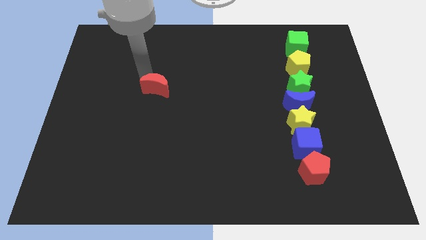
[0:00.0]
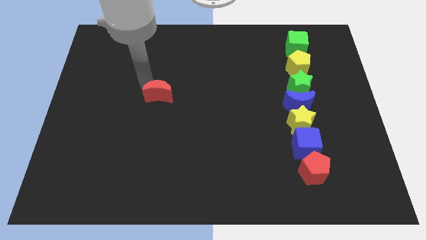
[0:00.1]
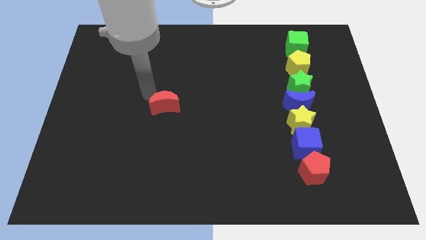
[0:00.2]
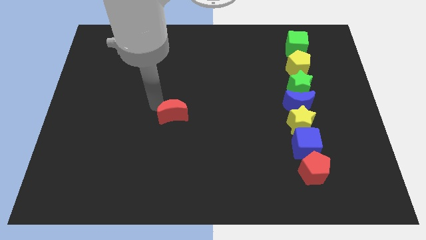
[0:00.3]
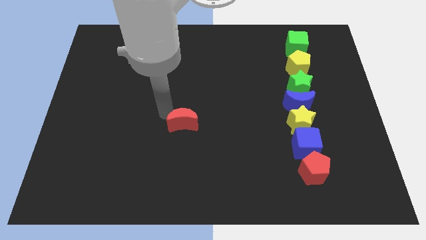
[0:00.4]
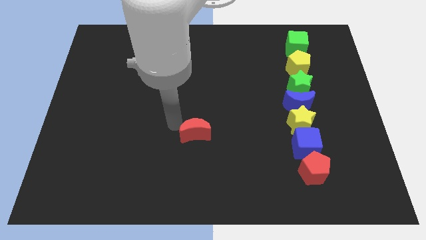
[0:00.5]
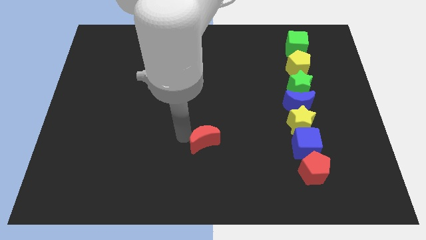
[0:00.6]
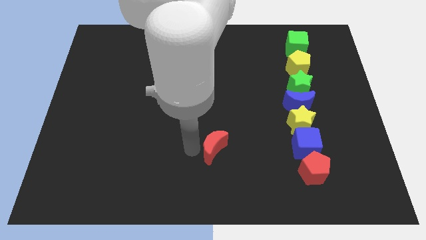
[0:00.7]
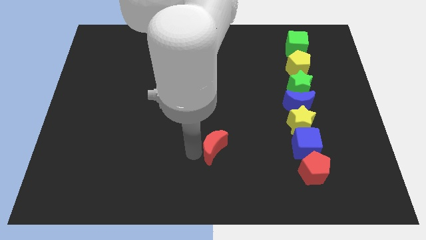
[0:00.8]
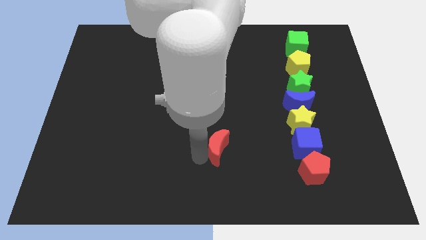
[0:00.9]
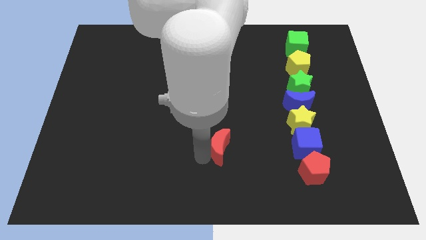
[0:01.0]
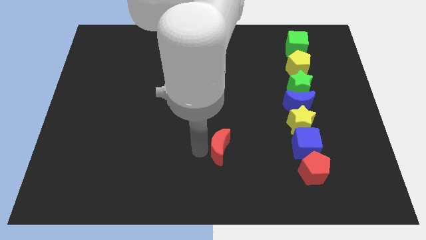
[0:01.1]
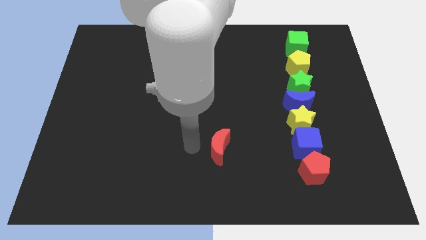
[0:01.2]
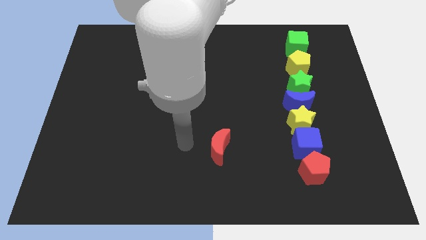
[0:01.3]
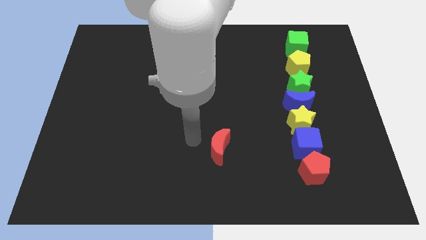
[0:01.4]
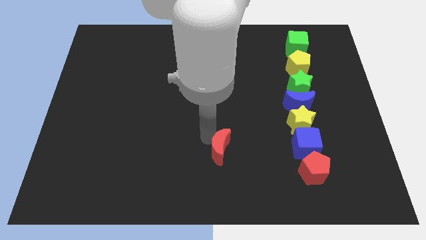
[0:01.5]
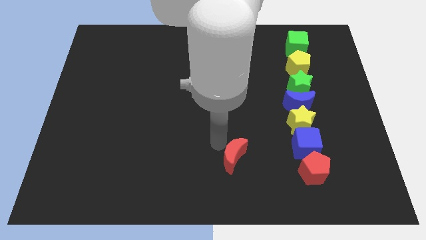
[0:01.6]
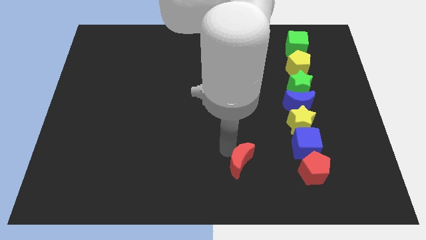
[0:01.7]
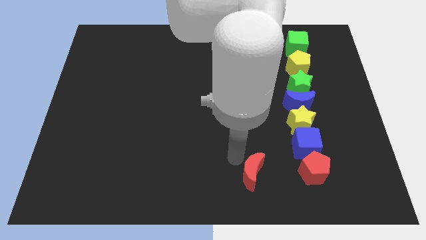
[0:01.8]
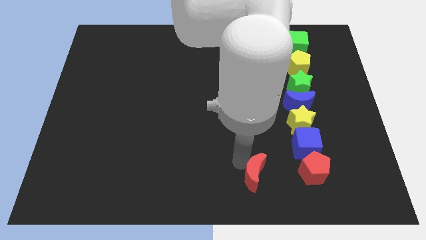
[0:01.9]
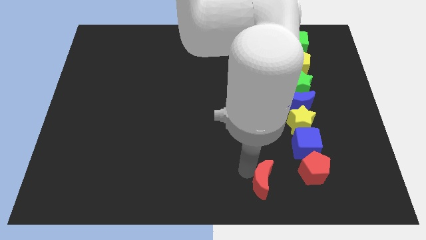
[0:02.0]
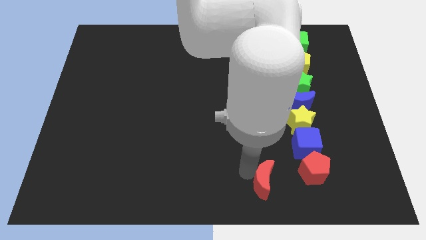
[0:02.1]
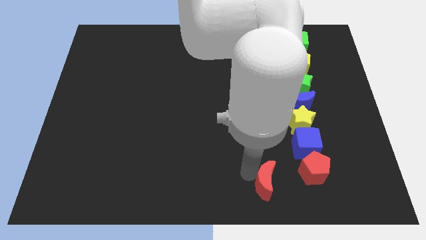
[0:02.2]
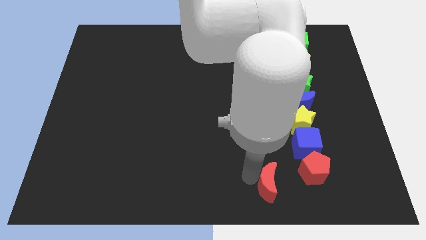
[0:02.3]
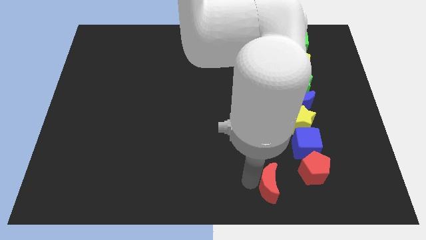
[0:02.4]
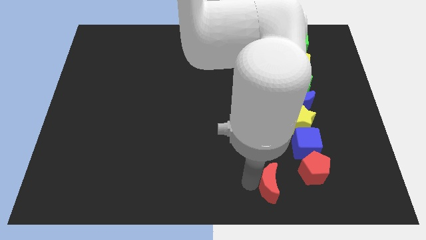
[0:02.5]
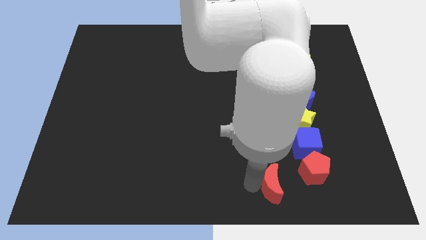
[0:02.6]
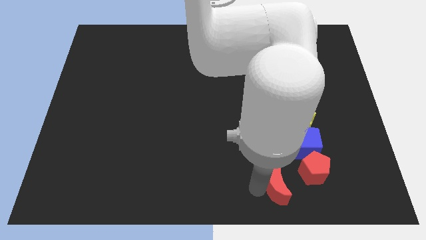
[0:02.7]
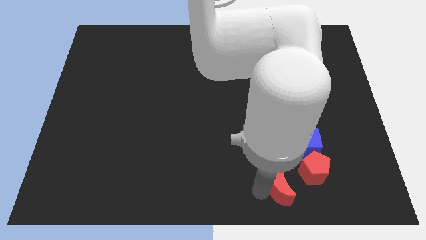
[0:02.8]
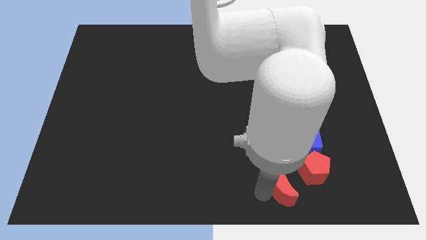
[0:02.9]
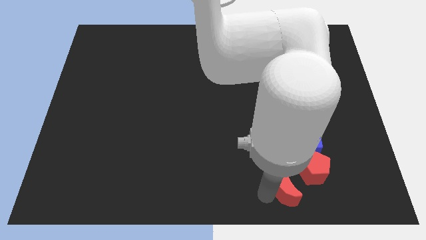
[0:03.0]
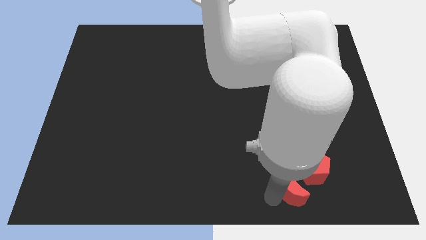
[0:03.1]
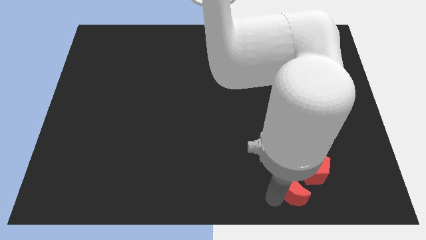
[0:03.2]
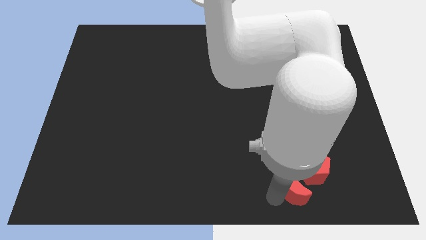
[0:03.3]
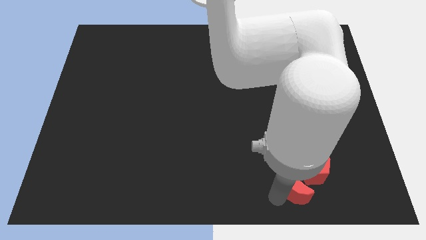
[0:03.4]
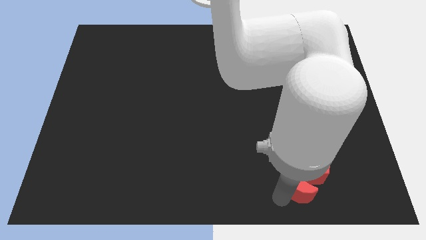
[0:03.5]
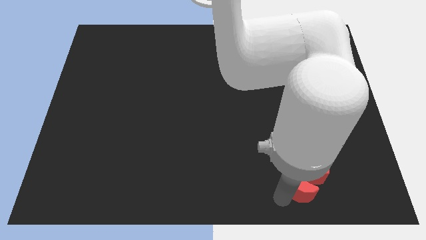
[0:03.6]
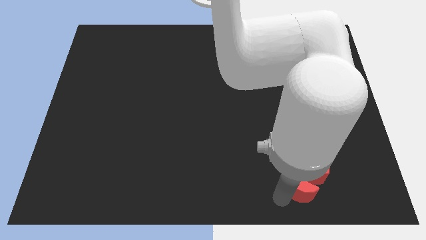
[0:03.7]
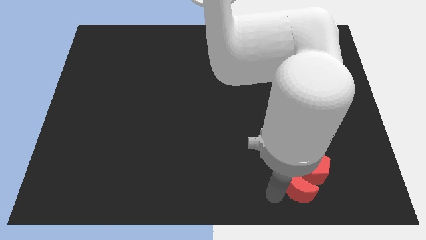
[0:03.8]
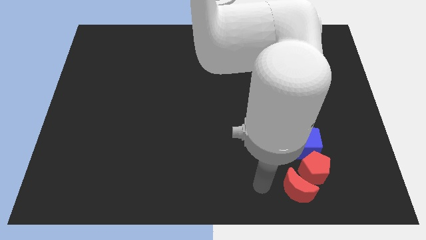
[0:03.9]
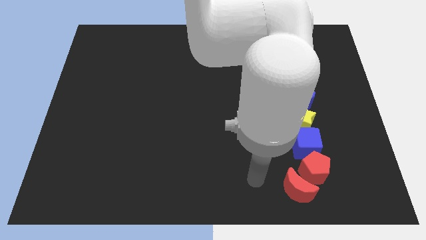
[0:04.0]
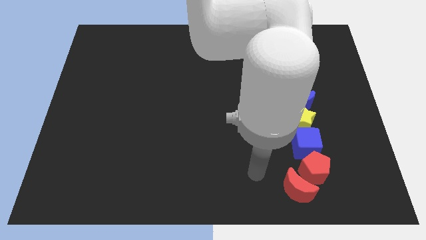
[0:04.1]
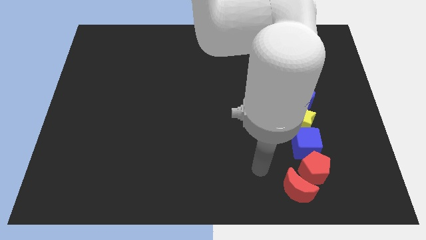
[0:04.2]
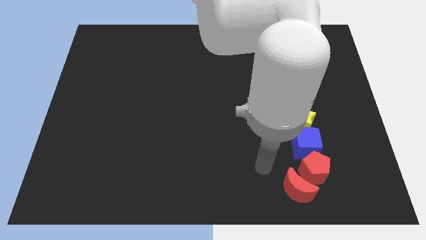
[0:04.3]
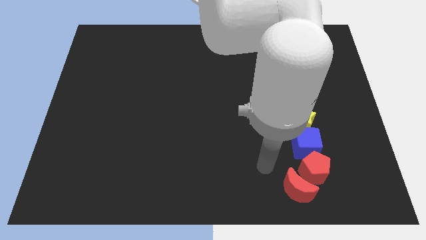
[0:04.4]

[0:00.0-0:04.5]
place the red crescent close to the red pentagon

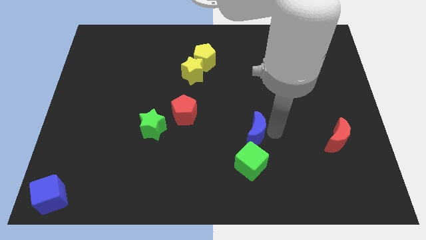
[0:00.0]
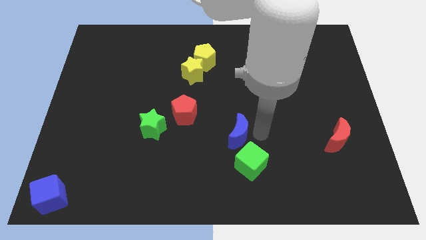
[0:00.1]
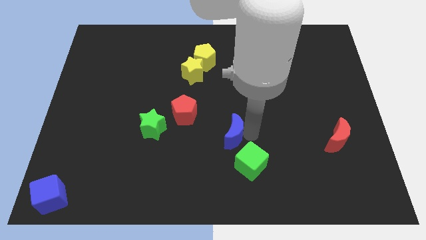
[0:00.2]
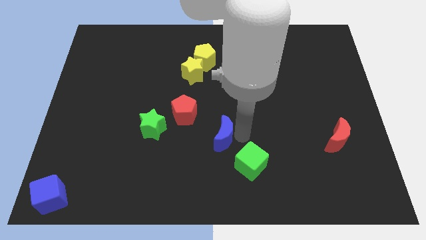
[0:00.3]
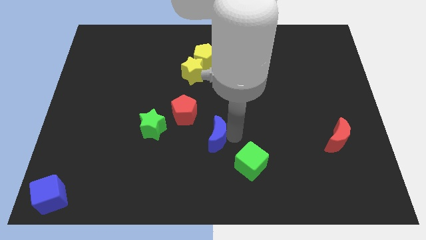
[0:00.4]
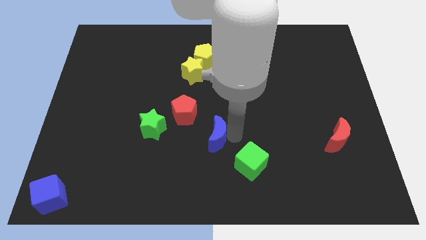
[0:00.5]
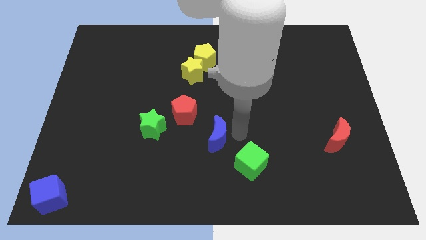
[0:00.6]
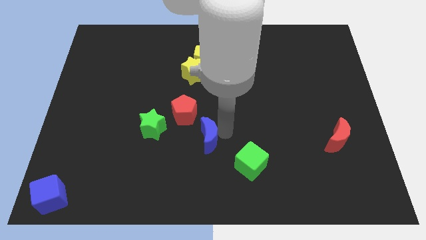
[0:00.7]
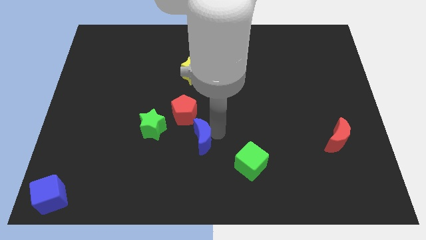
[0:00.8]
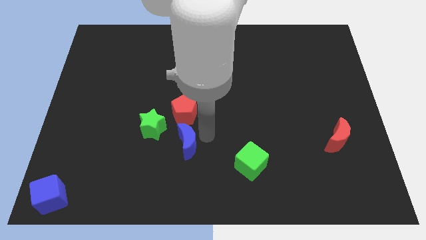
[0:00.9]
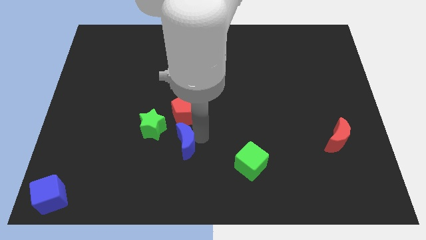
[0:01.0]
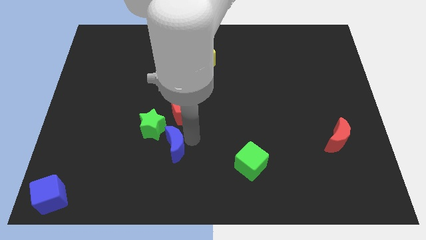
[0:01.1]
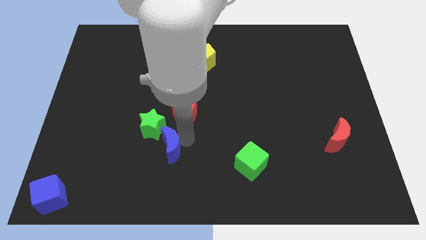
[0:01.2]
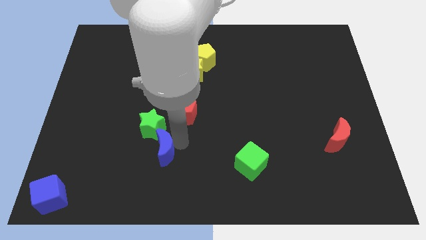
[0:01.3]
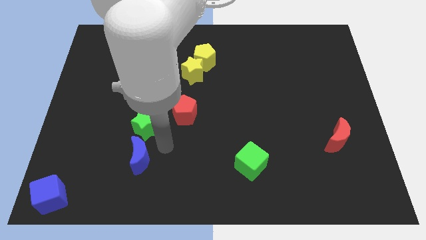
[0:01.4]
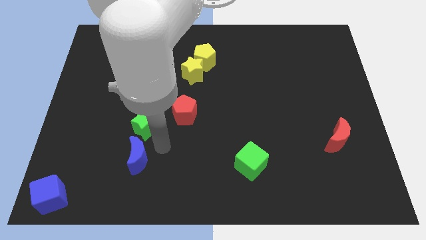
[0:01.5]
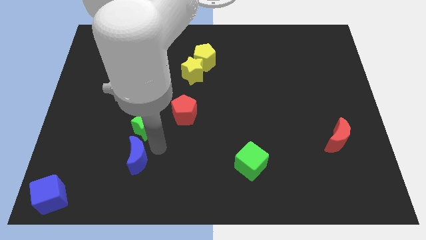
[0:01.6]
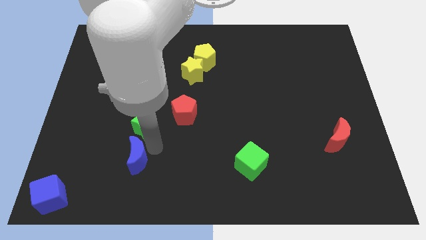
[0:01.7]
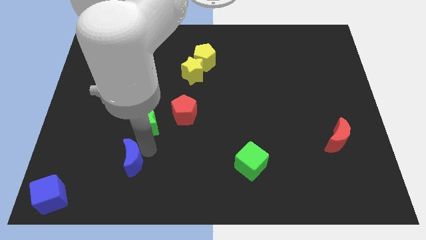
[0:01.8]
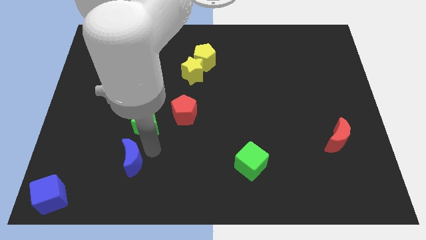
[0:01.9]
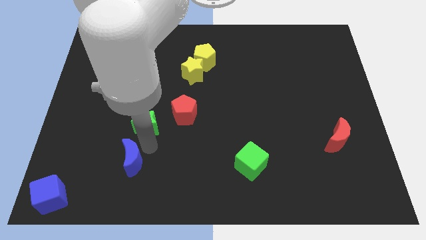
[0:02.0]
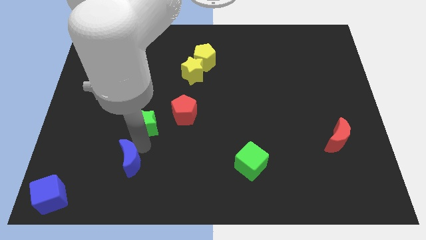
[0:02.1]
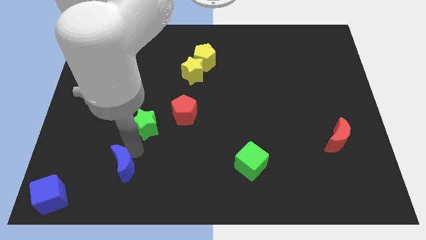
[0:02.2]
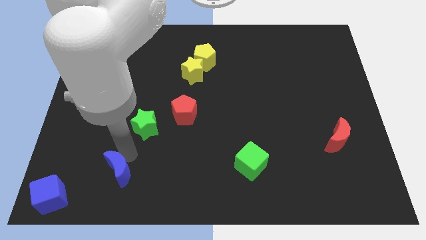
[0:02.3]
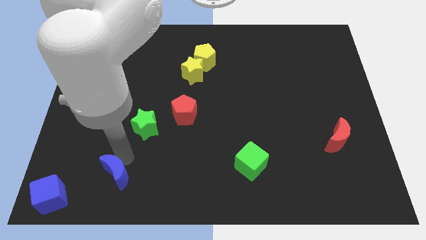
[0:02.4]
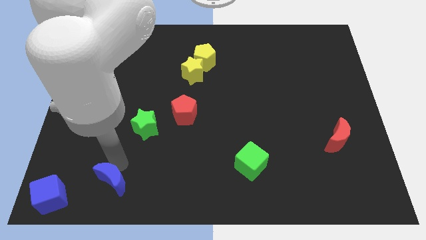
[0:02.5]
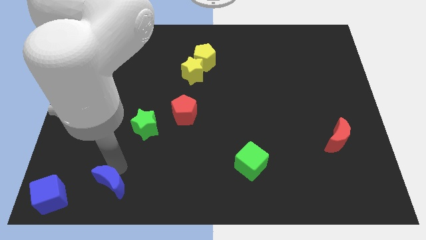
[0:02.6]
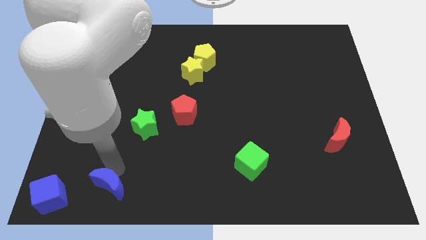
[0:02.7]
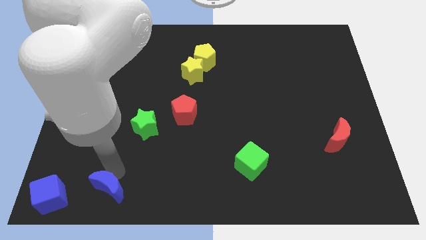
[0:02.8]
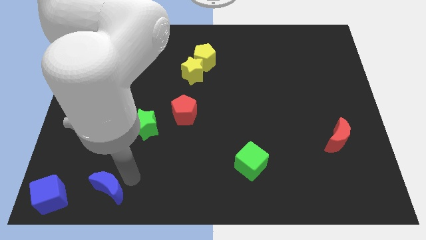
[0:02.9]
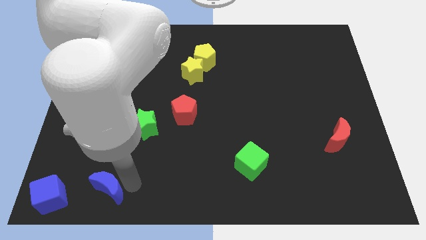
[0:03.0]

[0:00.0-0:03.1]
push the blue moon towards the bottom left side of the board

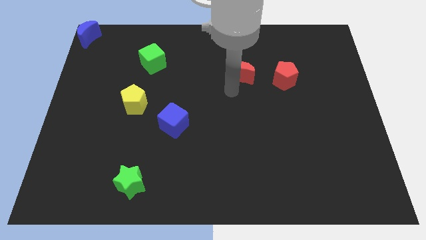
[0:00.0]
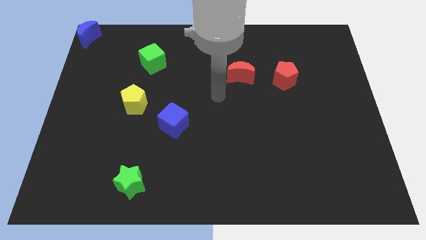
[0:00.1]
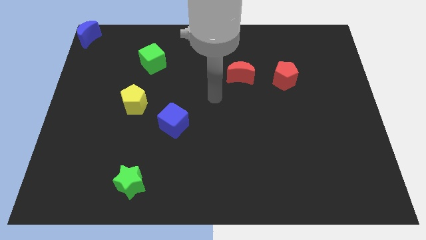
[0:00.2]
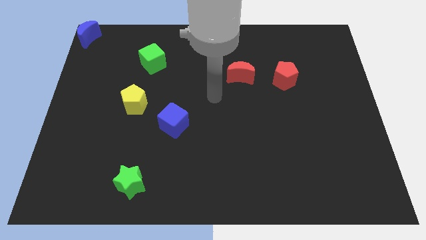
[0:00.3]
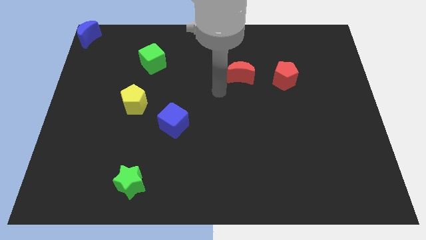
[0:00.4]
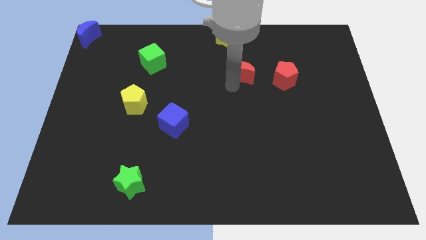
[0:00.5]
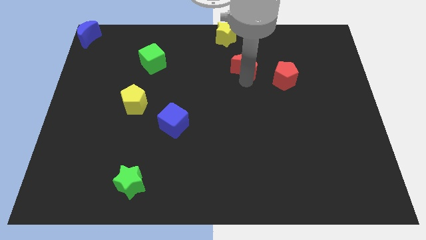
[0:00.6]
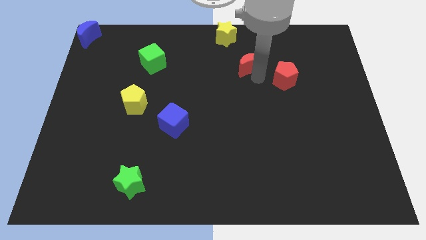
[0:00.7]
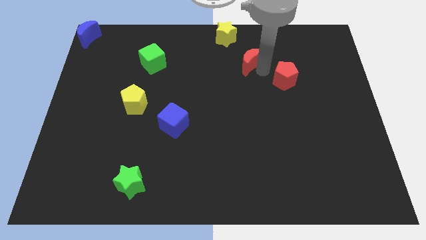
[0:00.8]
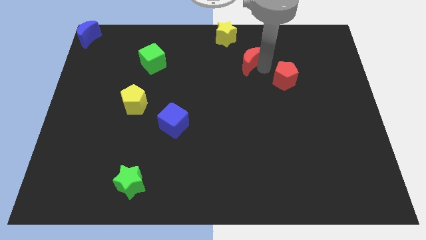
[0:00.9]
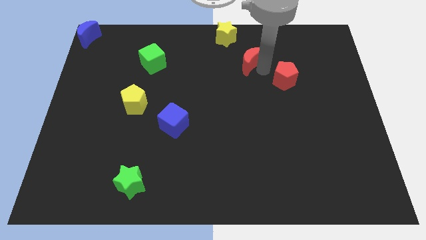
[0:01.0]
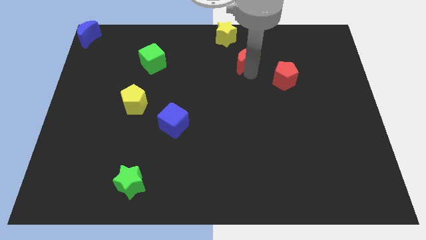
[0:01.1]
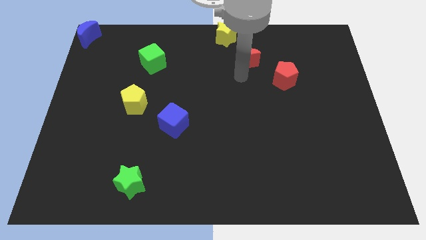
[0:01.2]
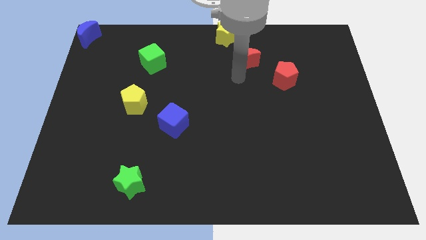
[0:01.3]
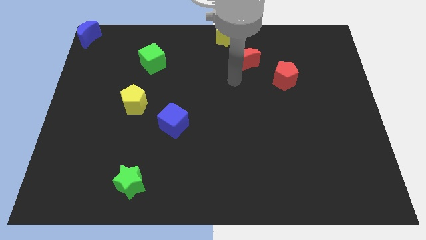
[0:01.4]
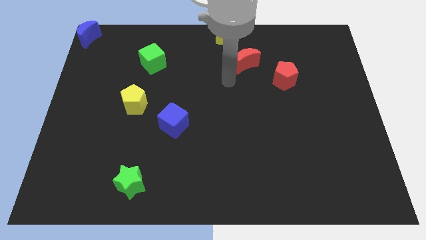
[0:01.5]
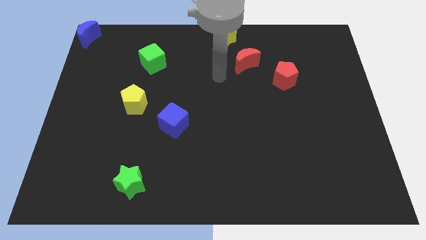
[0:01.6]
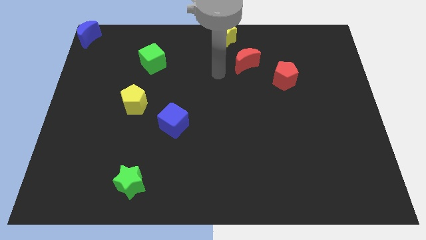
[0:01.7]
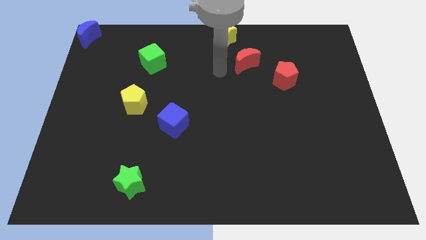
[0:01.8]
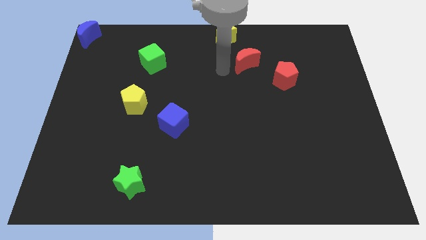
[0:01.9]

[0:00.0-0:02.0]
place the red moon between the red pentagon and yellow star
